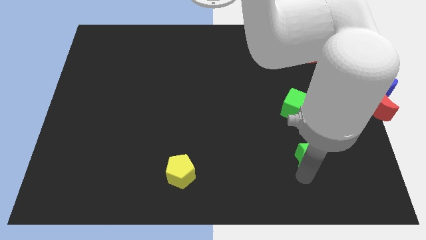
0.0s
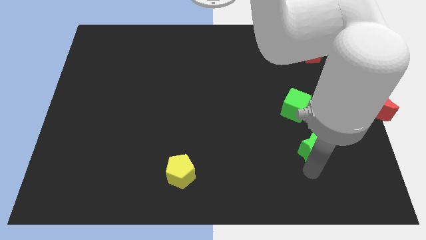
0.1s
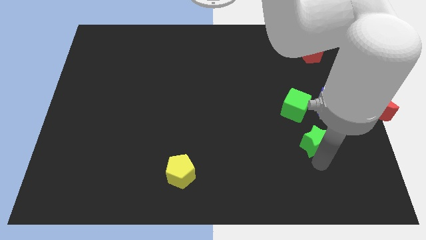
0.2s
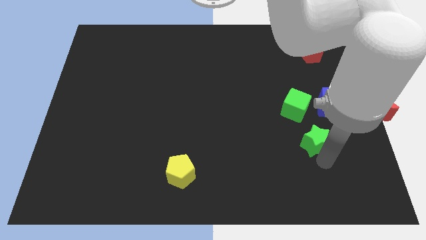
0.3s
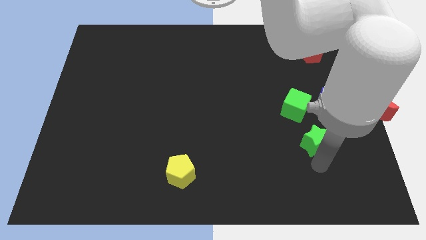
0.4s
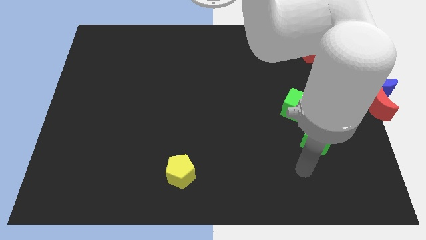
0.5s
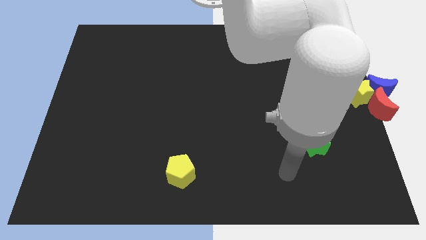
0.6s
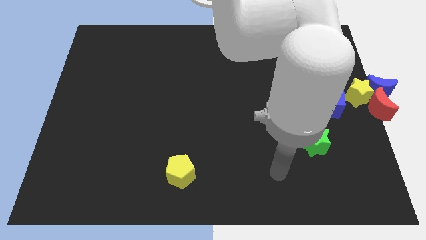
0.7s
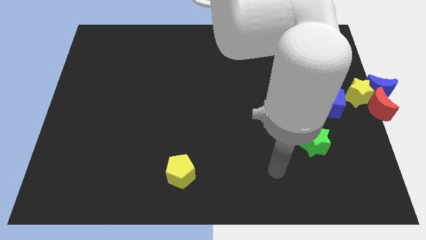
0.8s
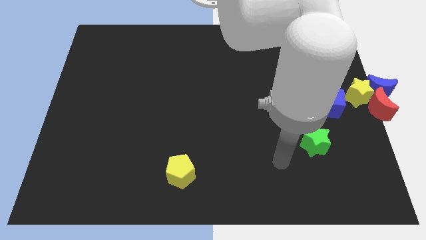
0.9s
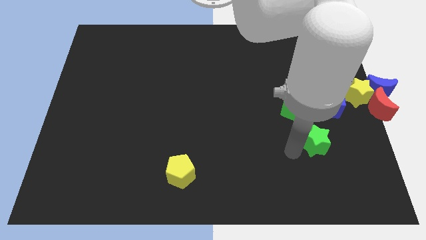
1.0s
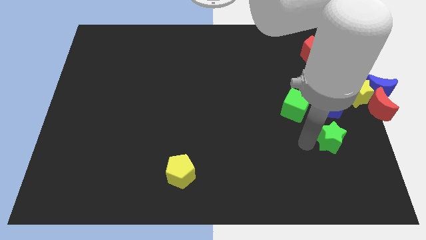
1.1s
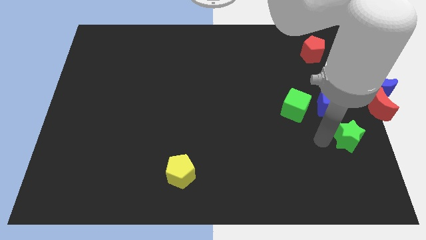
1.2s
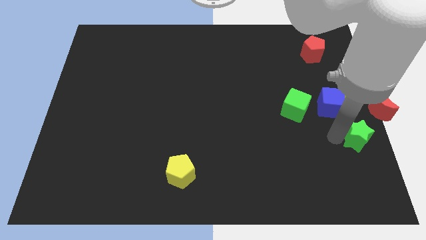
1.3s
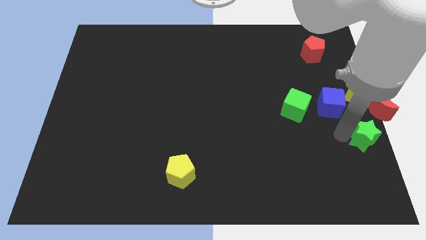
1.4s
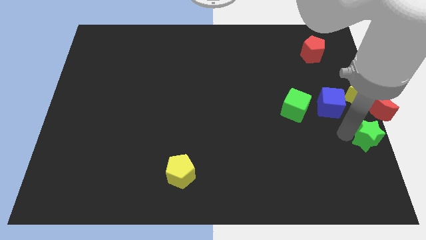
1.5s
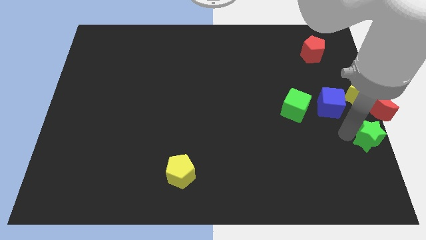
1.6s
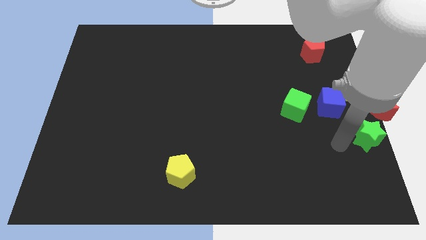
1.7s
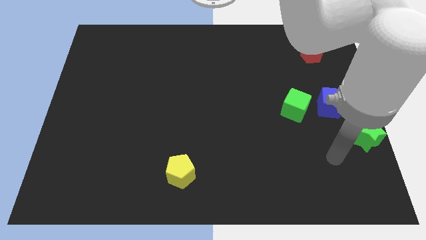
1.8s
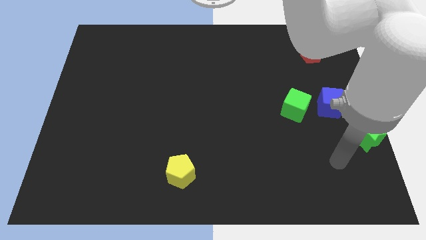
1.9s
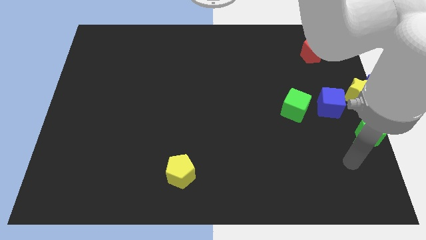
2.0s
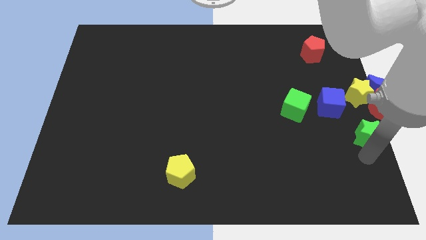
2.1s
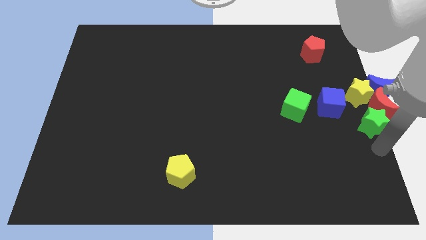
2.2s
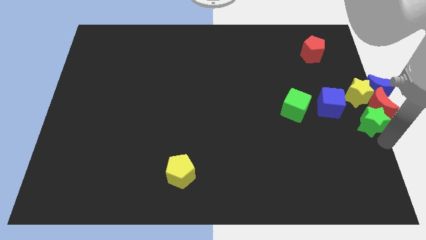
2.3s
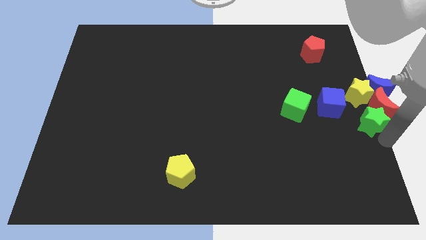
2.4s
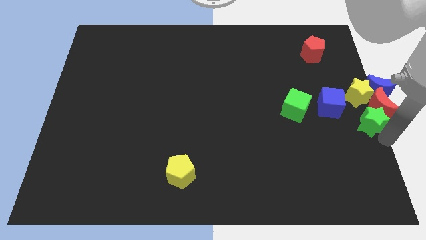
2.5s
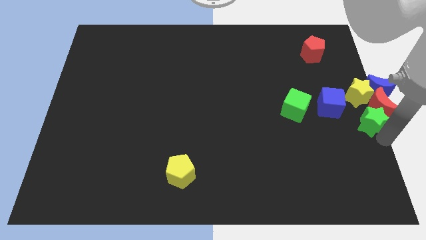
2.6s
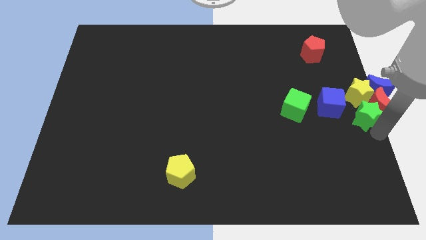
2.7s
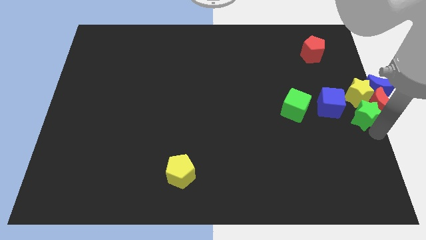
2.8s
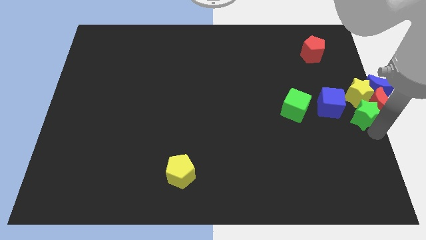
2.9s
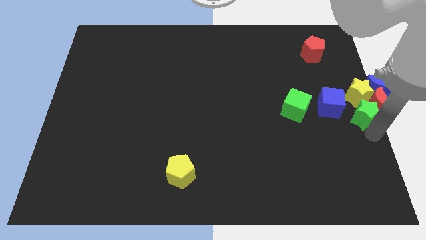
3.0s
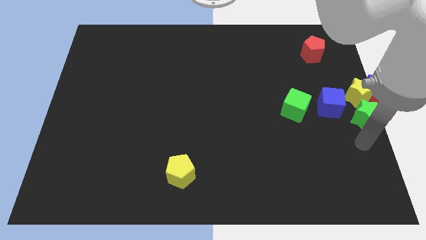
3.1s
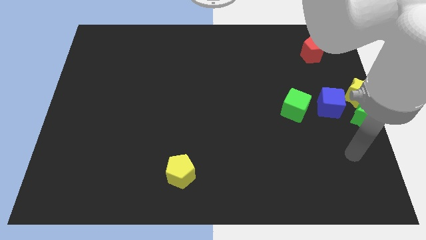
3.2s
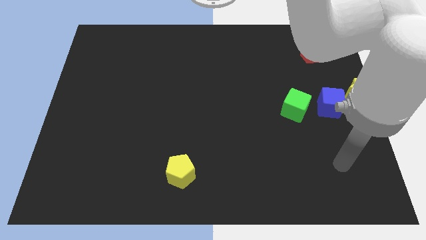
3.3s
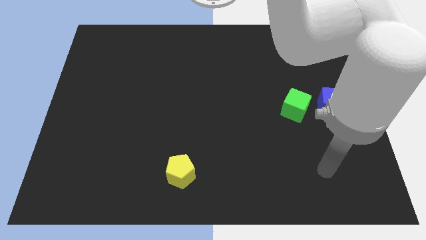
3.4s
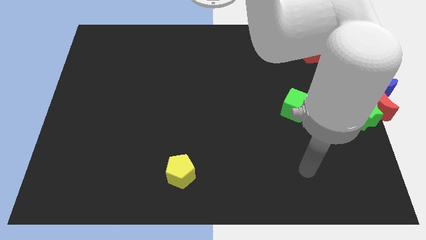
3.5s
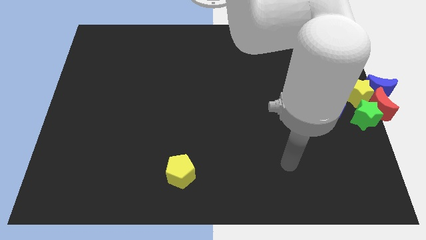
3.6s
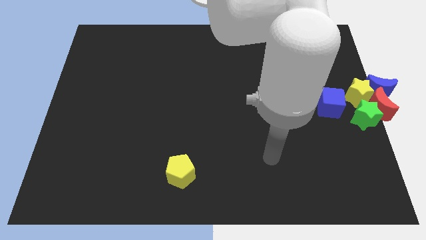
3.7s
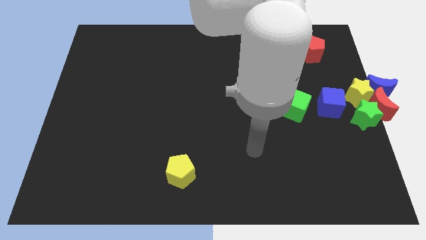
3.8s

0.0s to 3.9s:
push the green star to the bottom of the yellow star

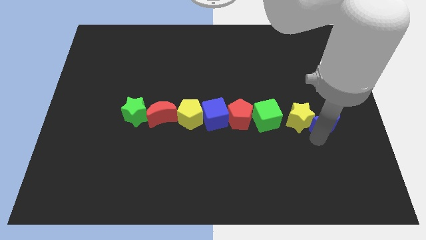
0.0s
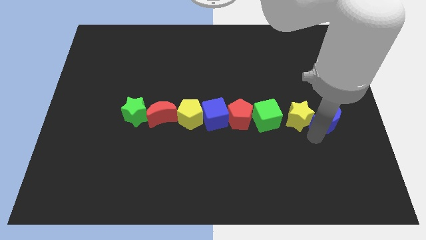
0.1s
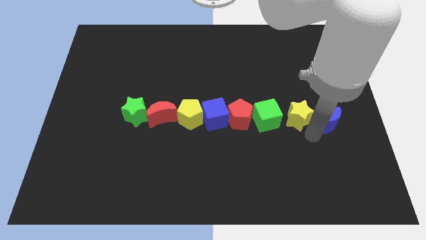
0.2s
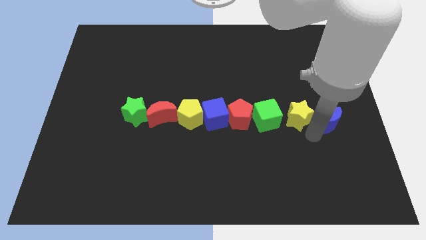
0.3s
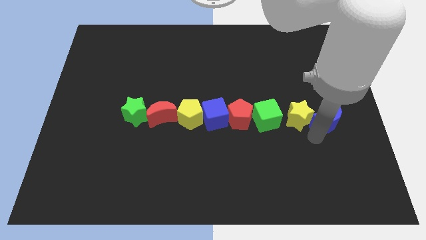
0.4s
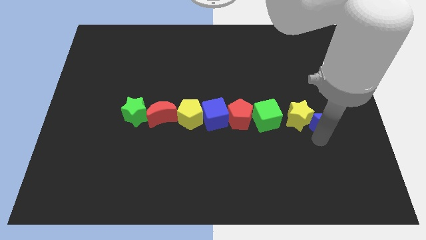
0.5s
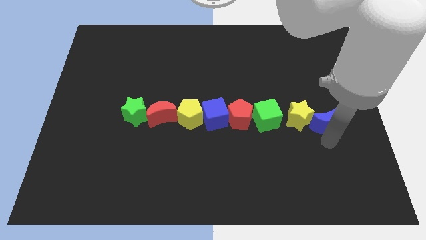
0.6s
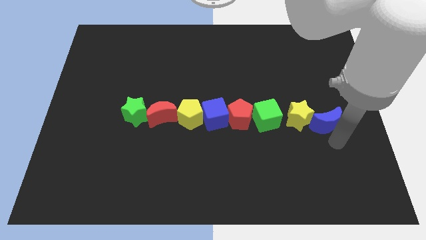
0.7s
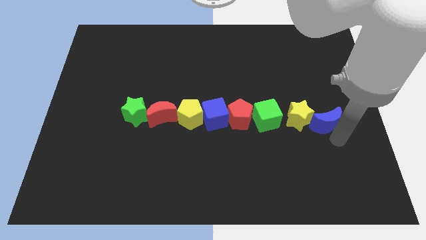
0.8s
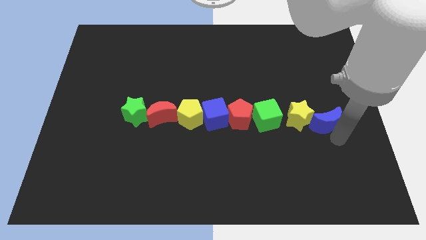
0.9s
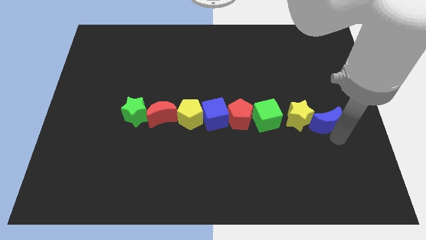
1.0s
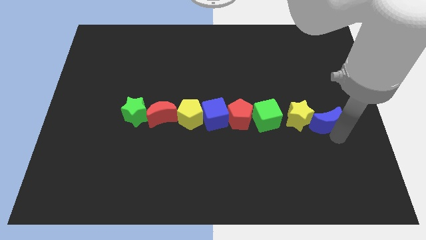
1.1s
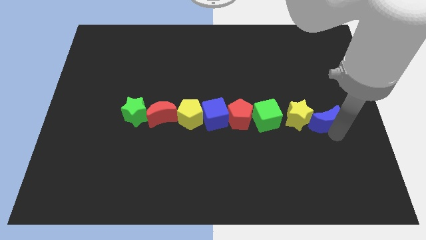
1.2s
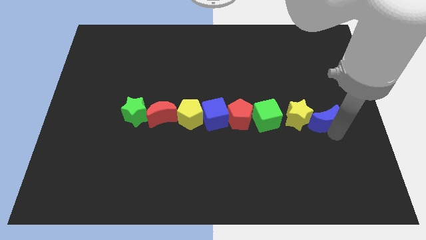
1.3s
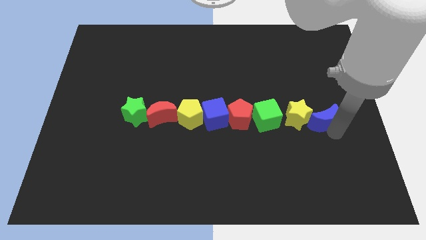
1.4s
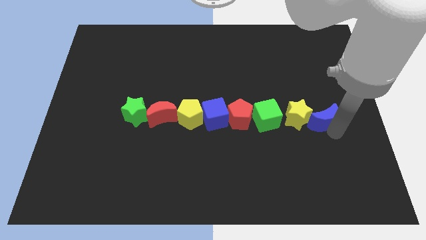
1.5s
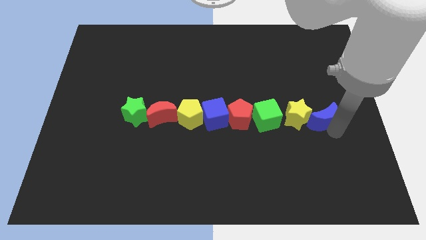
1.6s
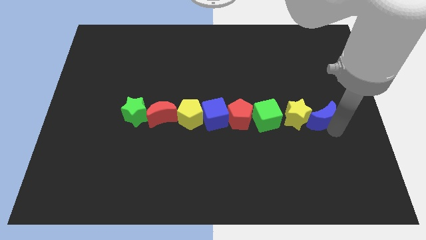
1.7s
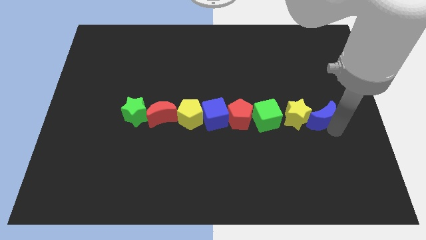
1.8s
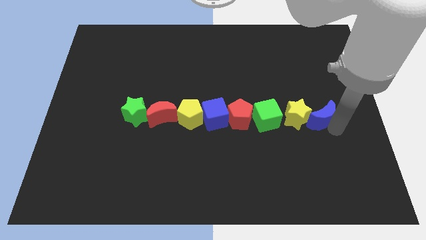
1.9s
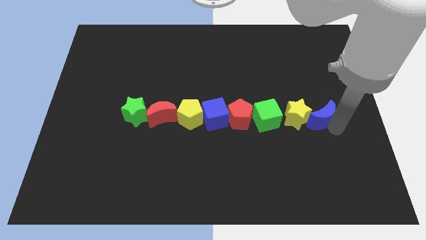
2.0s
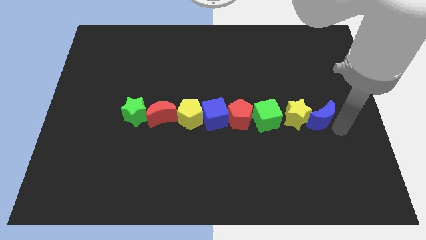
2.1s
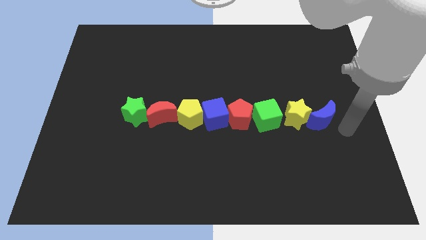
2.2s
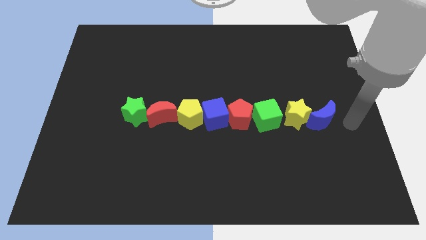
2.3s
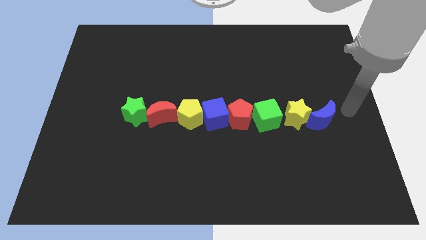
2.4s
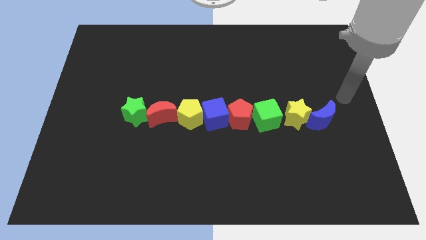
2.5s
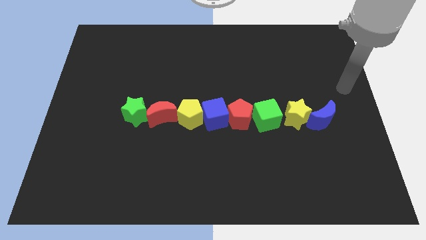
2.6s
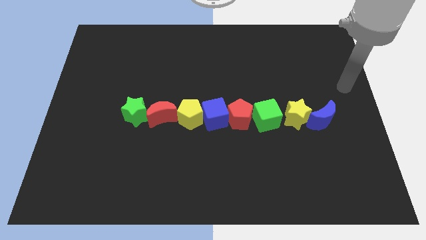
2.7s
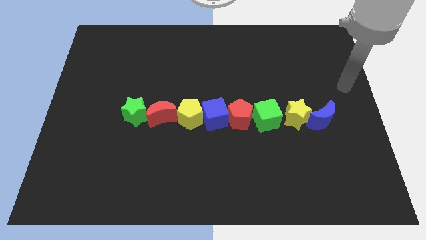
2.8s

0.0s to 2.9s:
move blue moon beside yellow star to form a vertical line

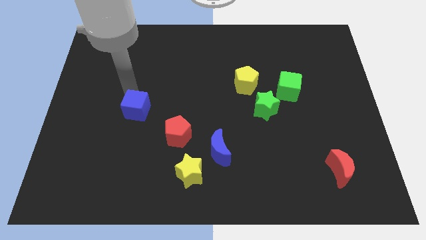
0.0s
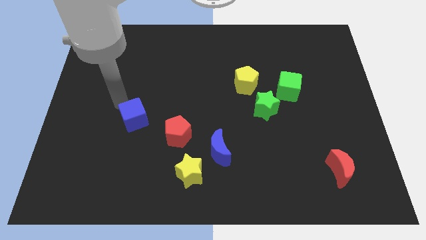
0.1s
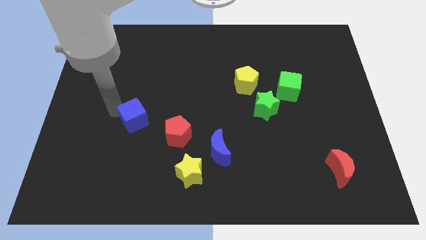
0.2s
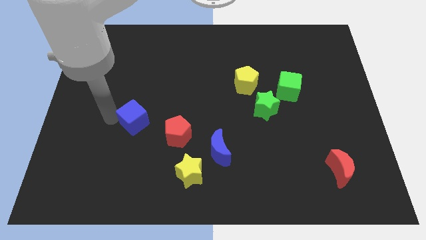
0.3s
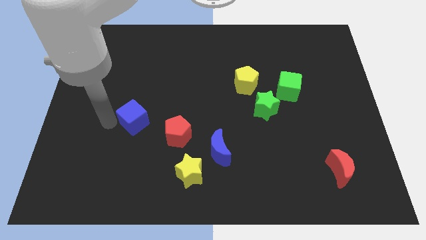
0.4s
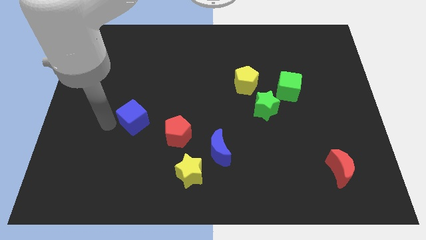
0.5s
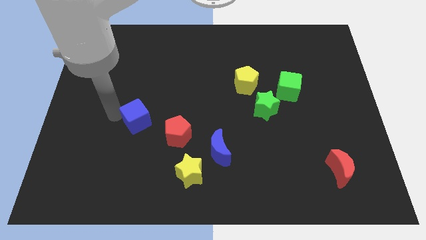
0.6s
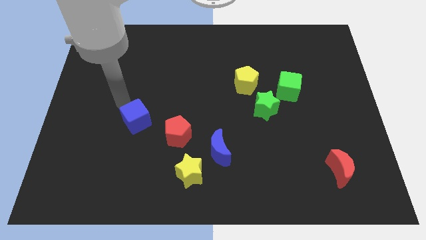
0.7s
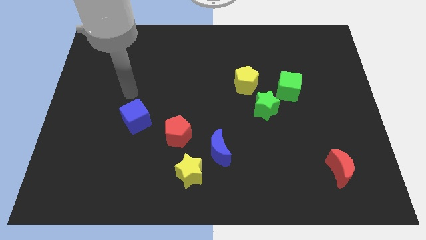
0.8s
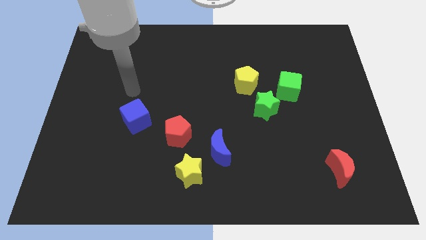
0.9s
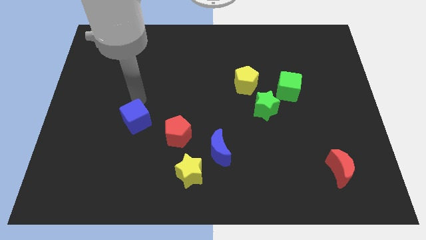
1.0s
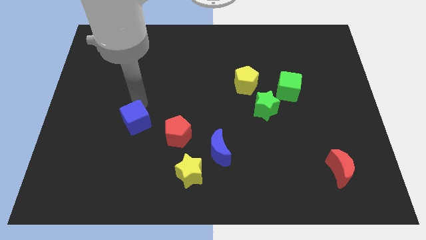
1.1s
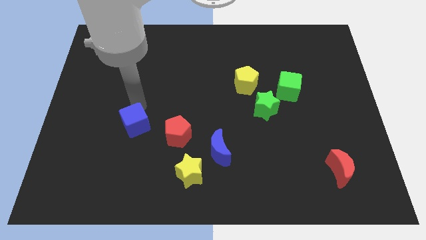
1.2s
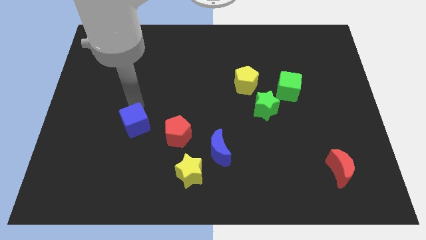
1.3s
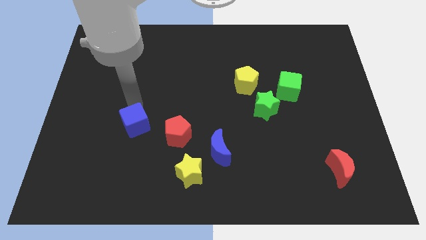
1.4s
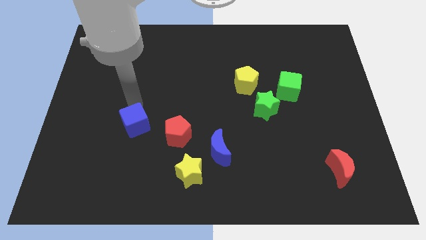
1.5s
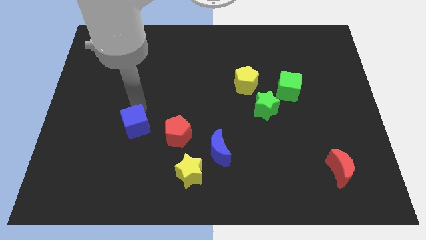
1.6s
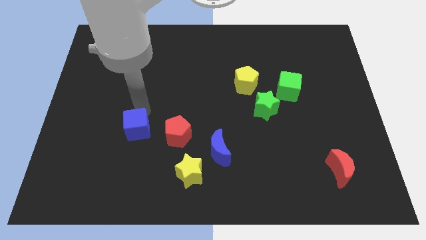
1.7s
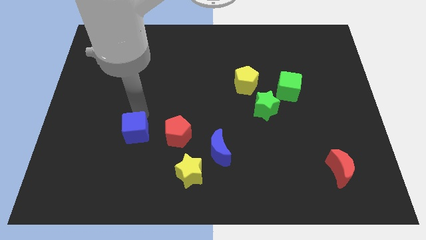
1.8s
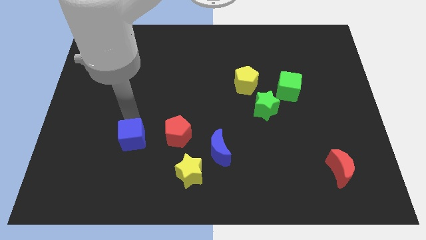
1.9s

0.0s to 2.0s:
place the blue cube parallel to the red pentagon
